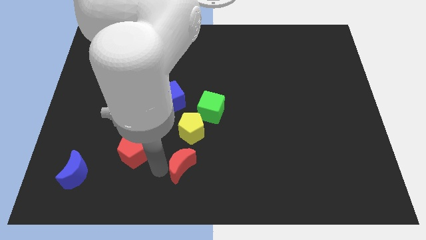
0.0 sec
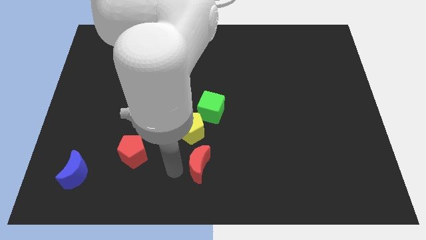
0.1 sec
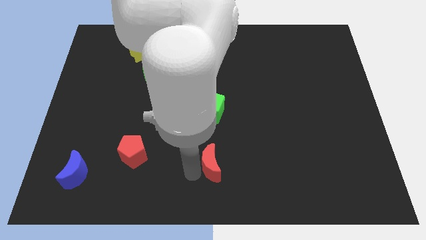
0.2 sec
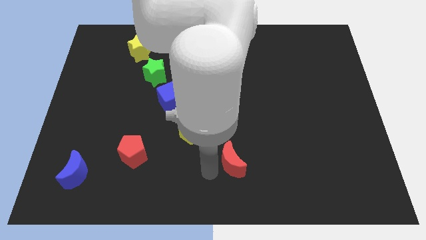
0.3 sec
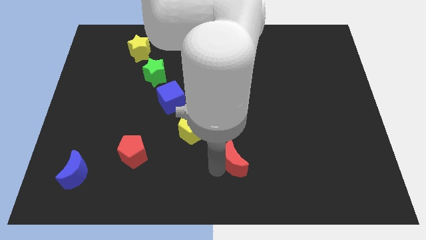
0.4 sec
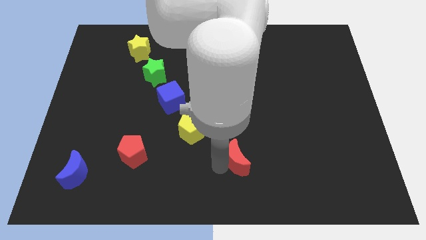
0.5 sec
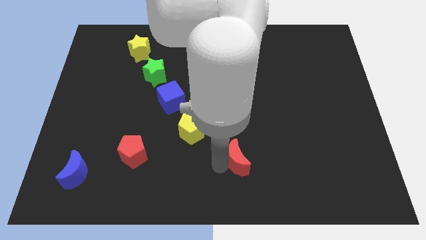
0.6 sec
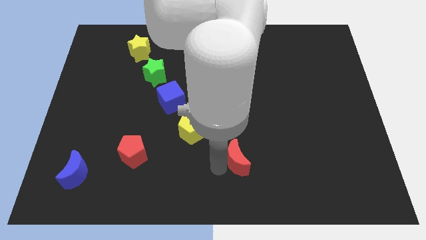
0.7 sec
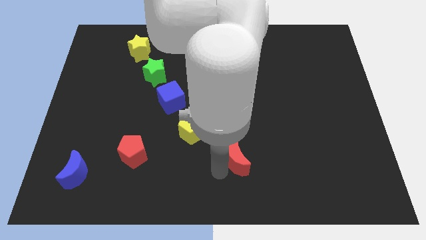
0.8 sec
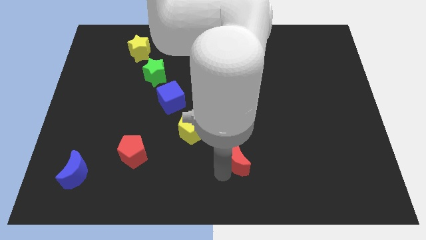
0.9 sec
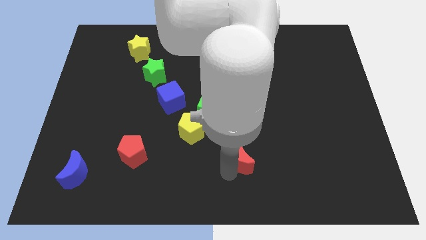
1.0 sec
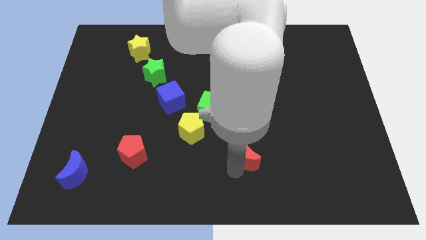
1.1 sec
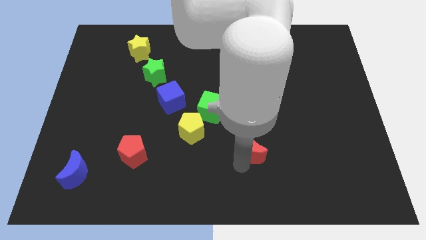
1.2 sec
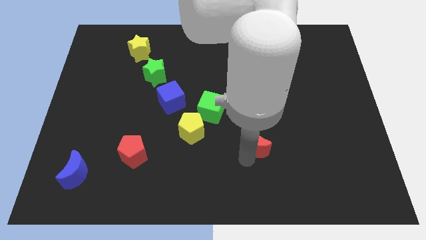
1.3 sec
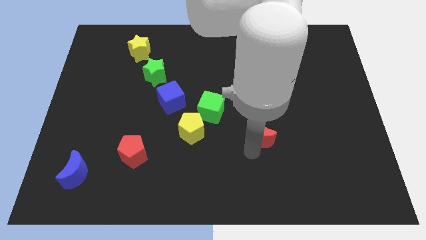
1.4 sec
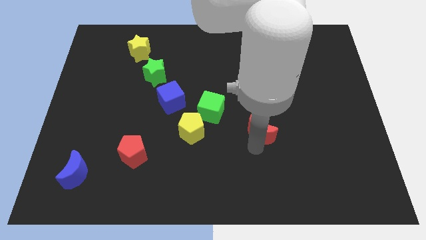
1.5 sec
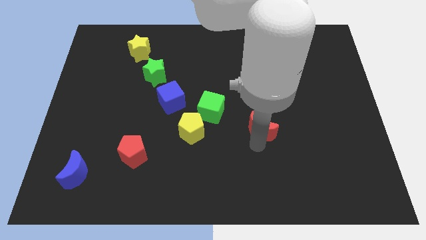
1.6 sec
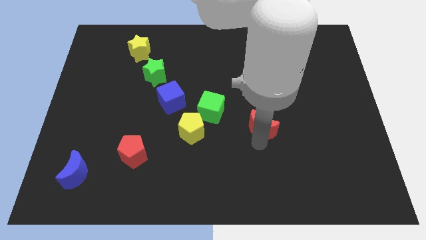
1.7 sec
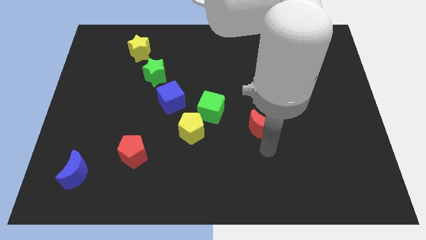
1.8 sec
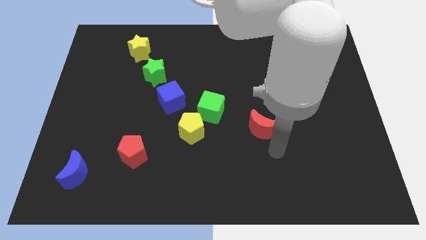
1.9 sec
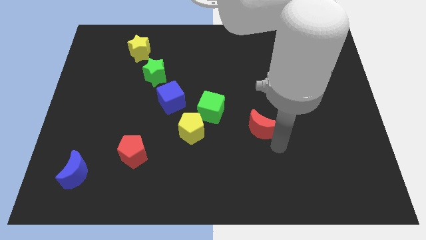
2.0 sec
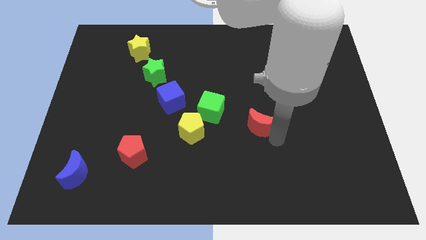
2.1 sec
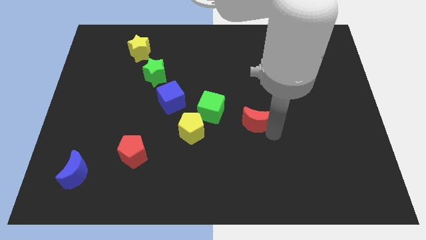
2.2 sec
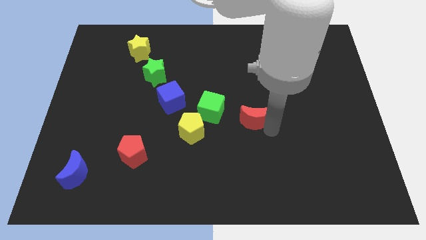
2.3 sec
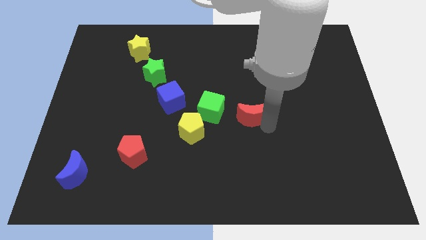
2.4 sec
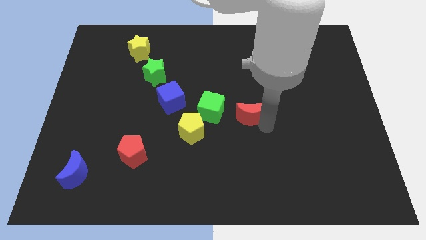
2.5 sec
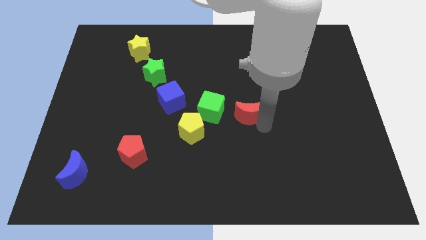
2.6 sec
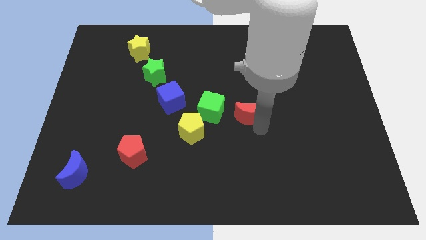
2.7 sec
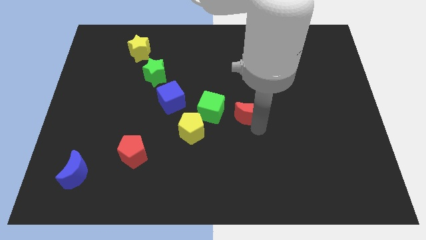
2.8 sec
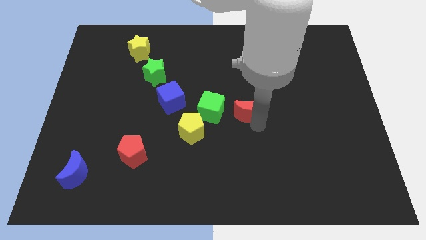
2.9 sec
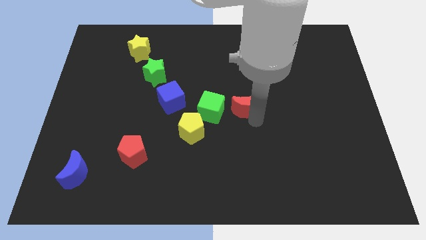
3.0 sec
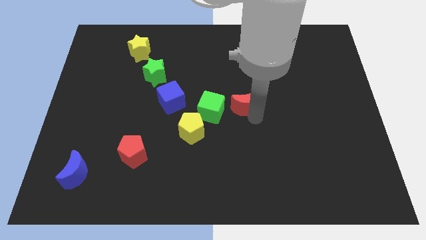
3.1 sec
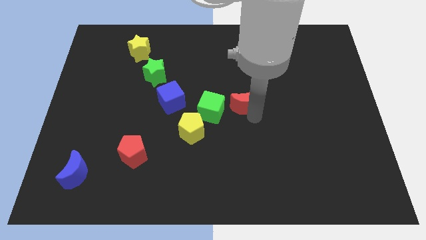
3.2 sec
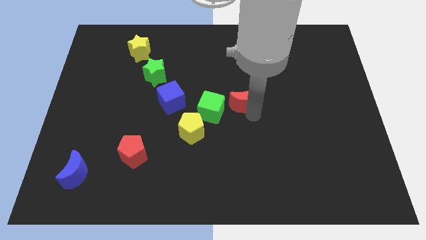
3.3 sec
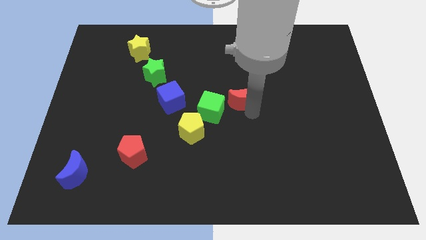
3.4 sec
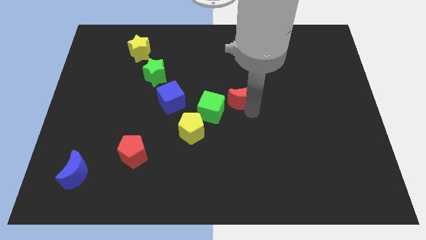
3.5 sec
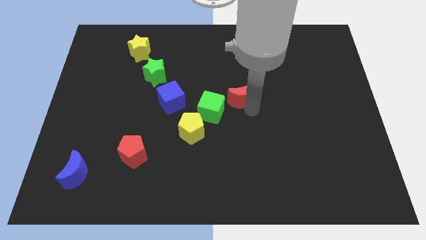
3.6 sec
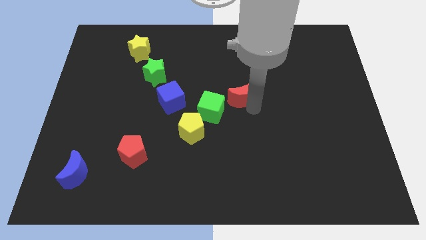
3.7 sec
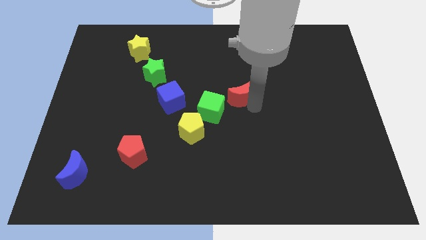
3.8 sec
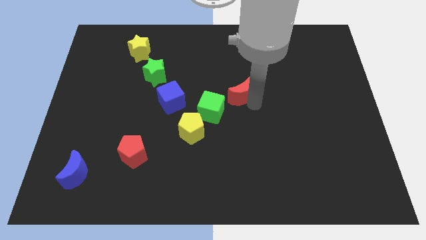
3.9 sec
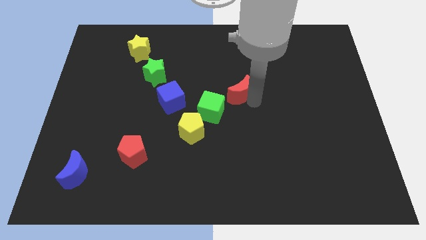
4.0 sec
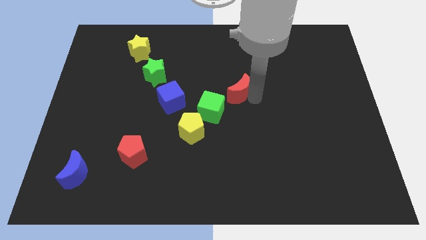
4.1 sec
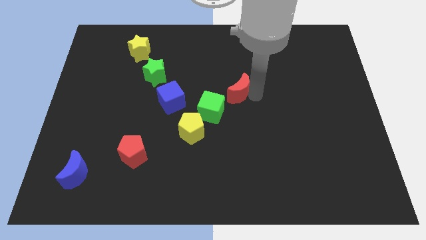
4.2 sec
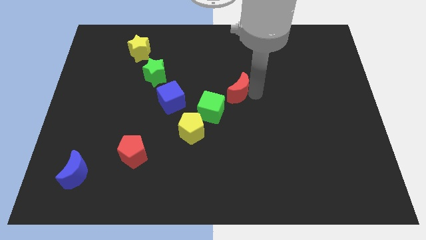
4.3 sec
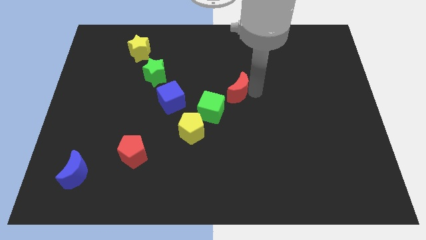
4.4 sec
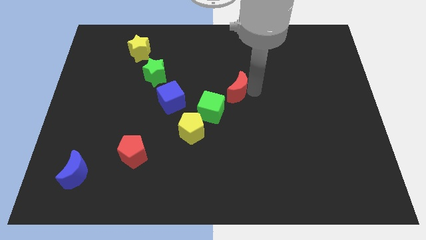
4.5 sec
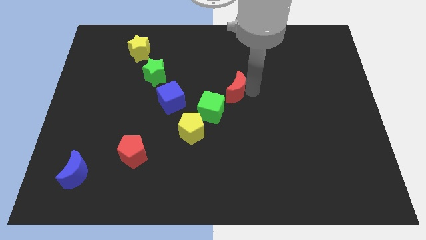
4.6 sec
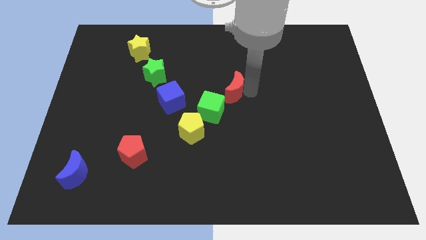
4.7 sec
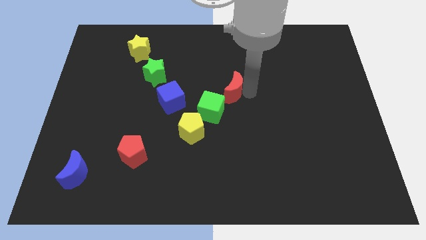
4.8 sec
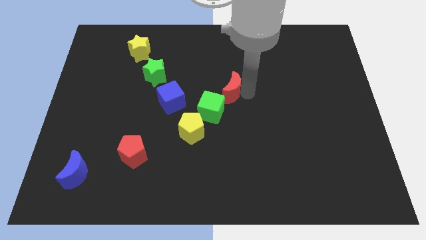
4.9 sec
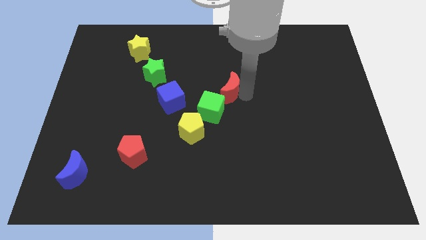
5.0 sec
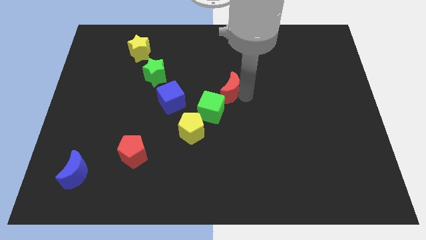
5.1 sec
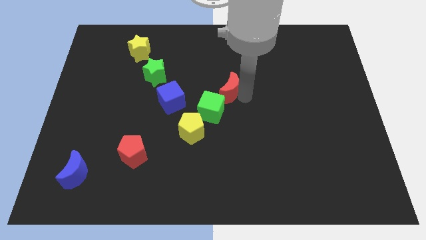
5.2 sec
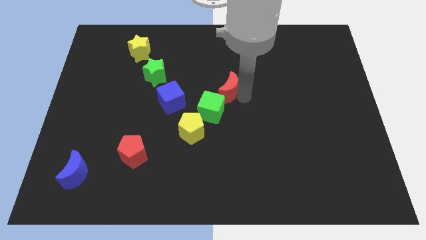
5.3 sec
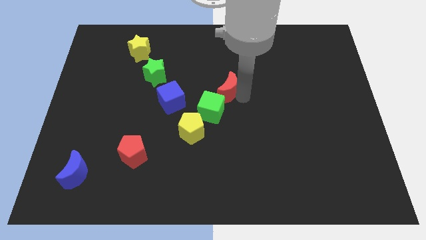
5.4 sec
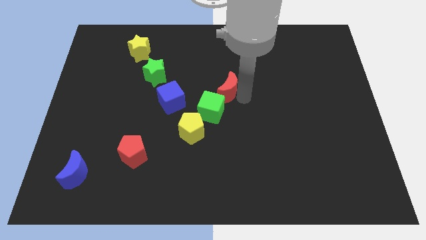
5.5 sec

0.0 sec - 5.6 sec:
place the red crescent to the top right of green cube

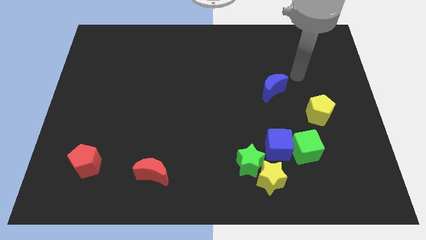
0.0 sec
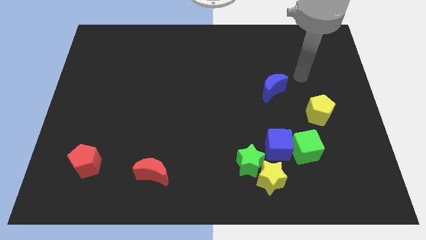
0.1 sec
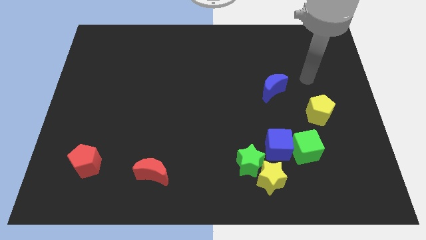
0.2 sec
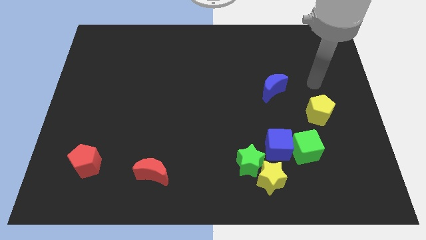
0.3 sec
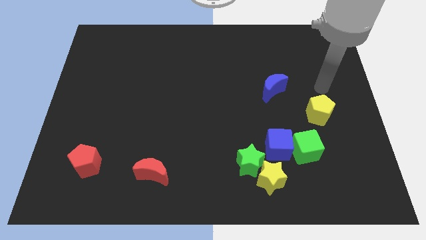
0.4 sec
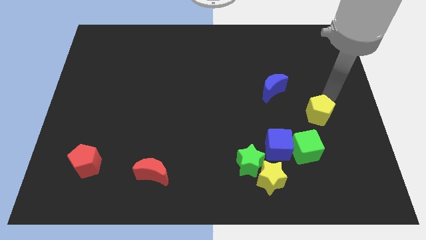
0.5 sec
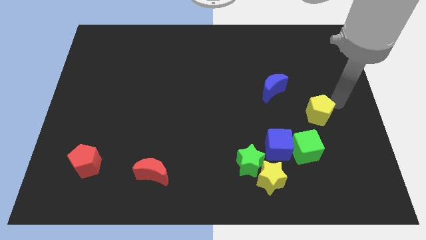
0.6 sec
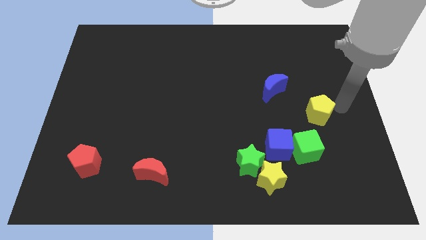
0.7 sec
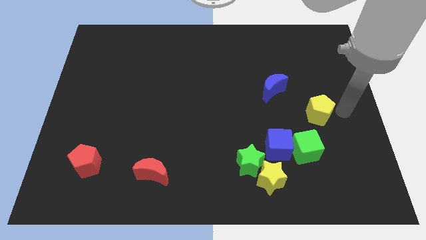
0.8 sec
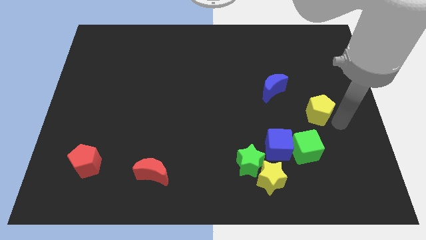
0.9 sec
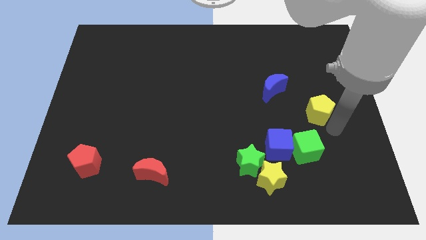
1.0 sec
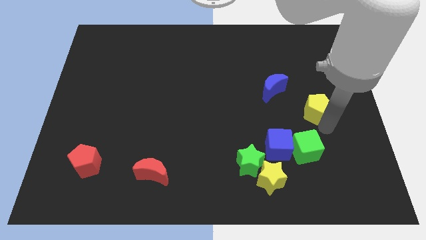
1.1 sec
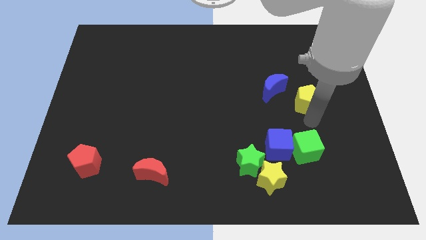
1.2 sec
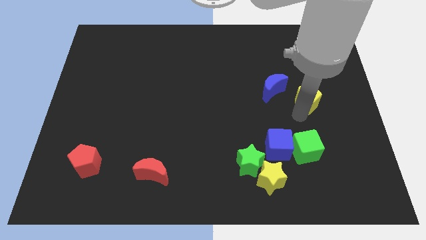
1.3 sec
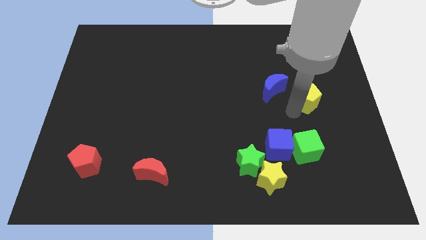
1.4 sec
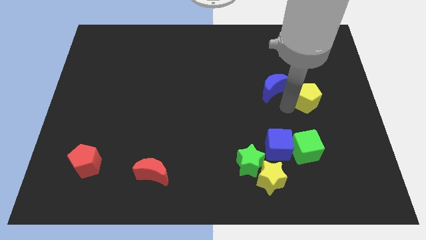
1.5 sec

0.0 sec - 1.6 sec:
move the yellow pentagon slightly up

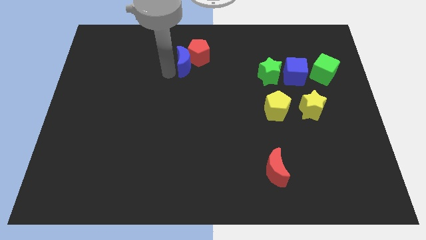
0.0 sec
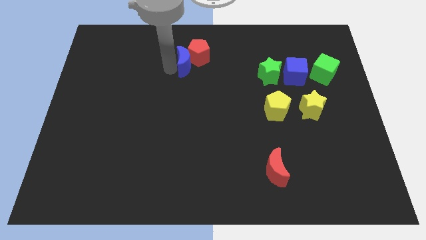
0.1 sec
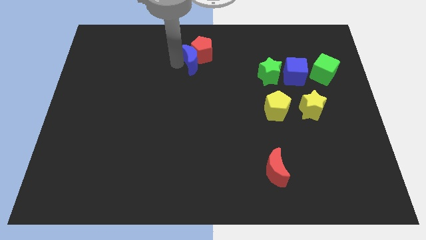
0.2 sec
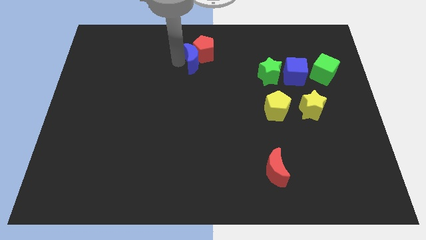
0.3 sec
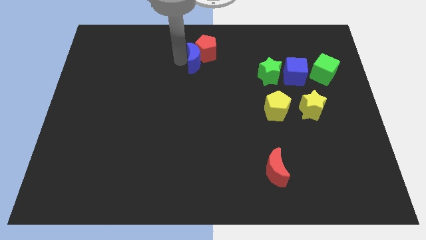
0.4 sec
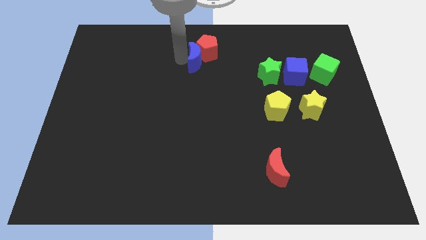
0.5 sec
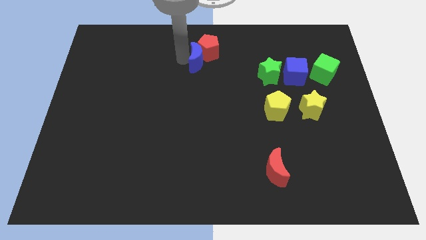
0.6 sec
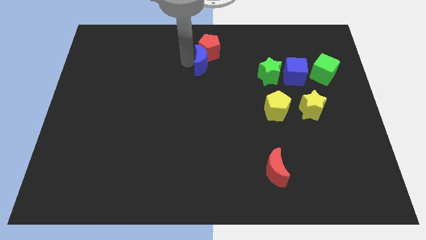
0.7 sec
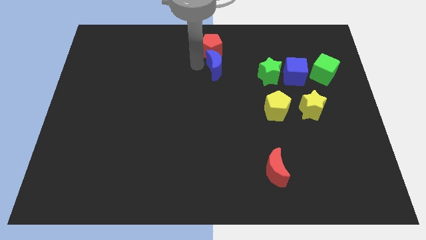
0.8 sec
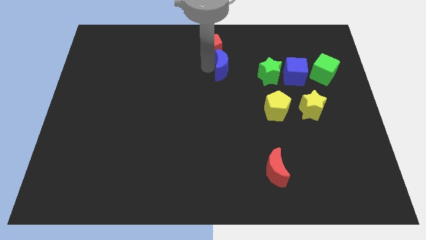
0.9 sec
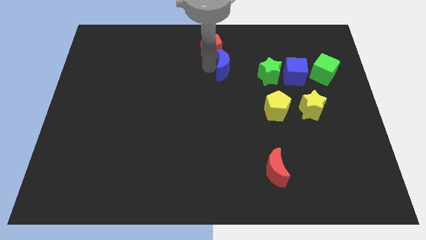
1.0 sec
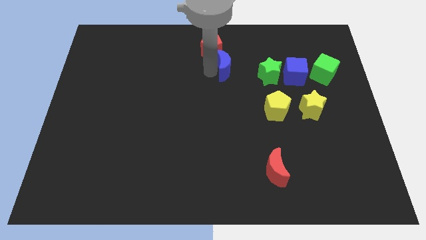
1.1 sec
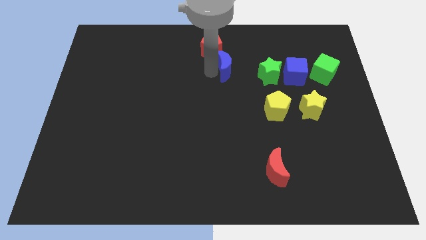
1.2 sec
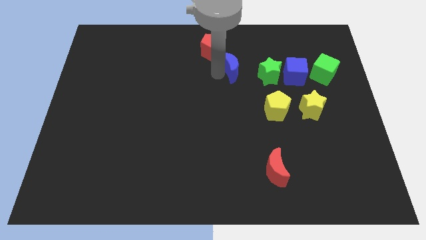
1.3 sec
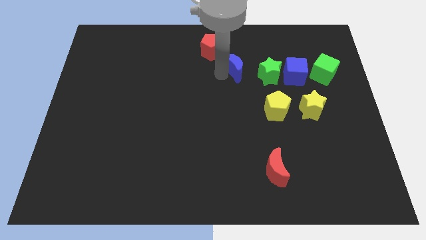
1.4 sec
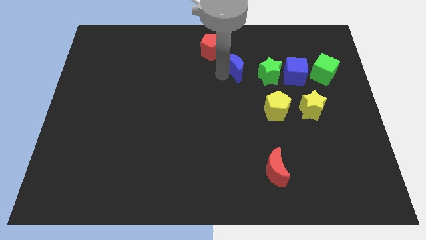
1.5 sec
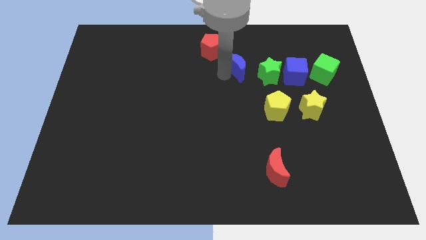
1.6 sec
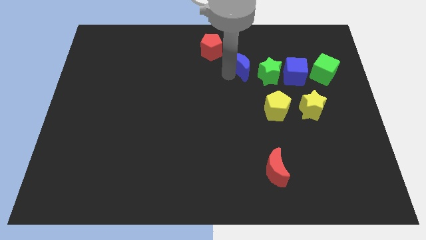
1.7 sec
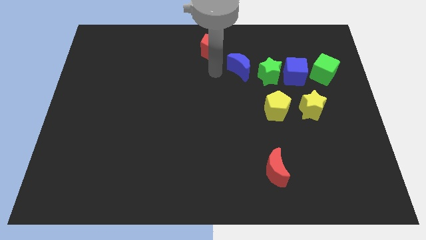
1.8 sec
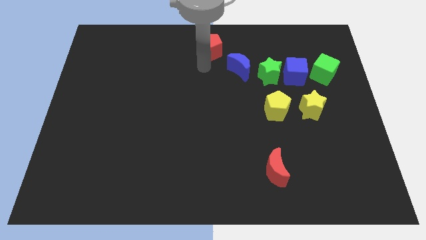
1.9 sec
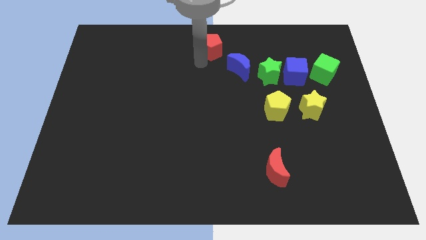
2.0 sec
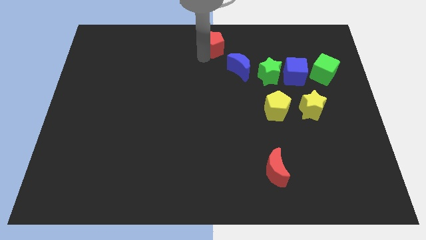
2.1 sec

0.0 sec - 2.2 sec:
move the blue crescent horizontal line left to the green star
